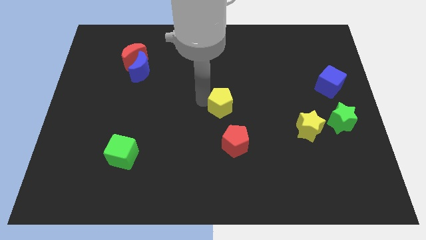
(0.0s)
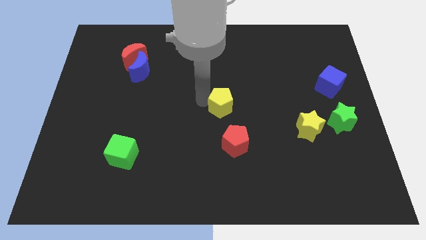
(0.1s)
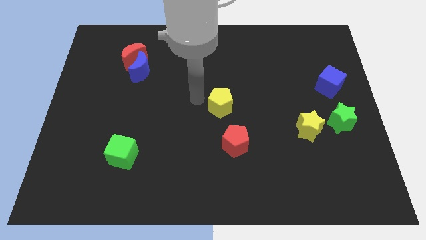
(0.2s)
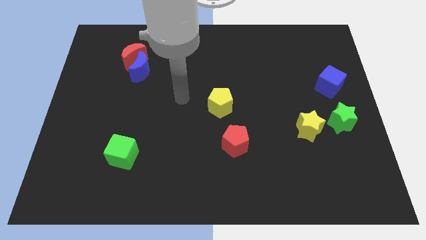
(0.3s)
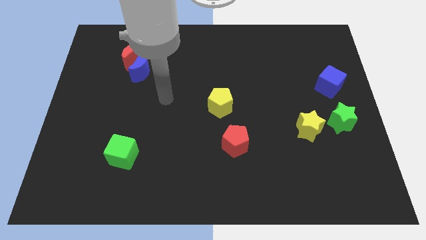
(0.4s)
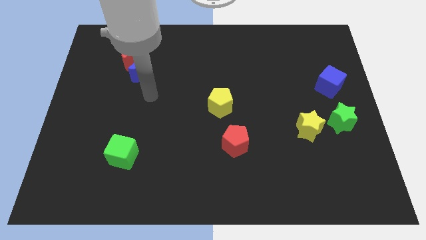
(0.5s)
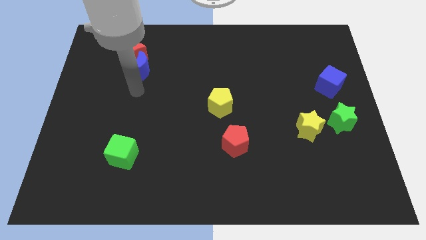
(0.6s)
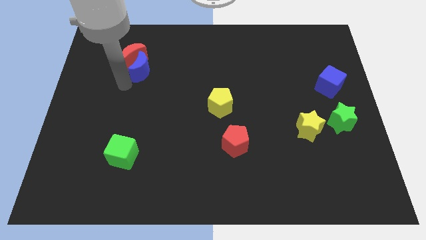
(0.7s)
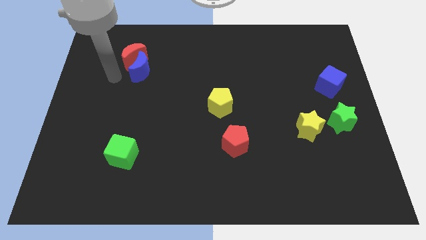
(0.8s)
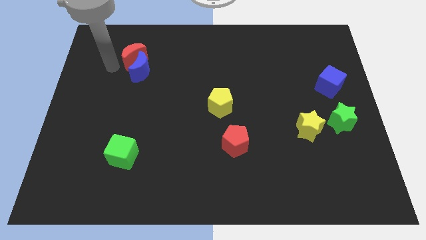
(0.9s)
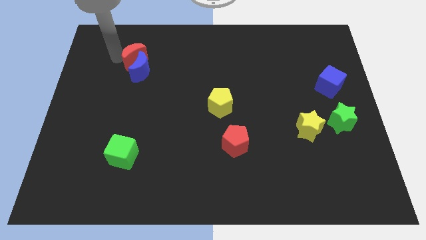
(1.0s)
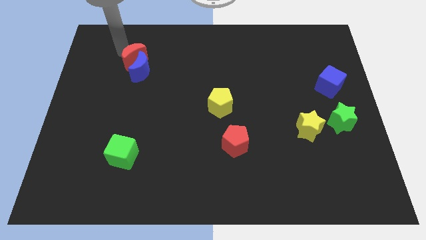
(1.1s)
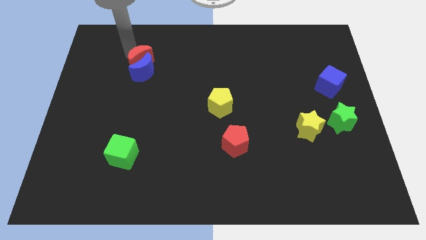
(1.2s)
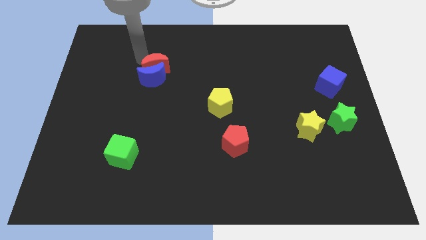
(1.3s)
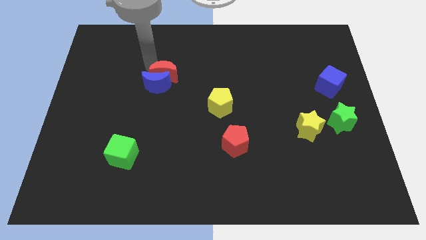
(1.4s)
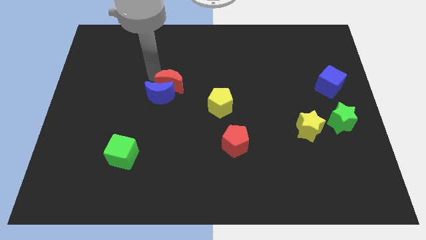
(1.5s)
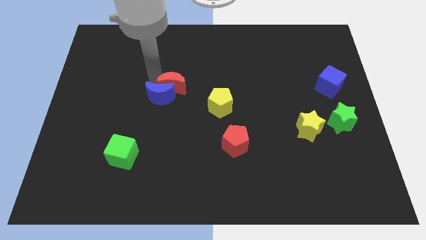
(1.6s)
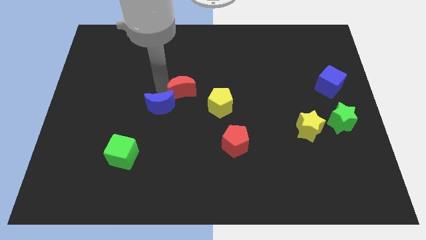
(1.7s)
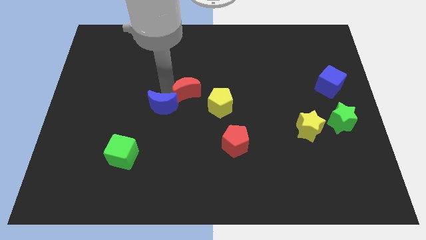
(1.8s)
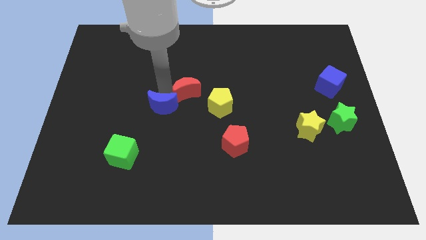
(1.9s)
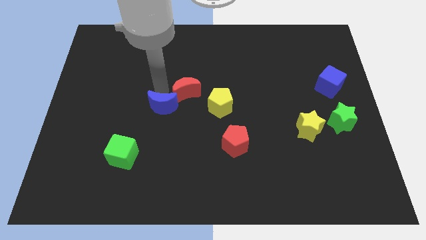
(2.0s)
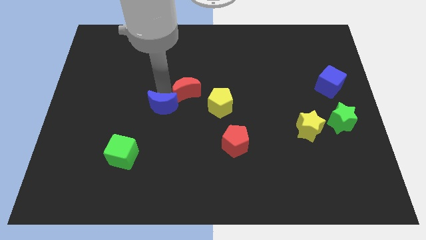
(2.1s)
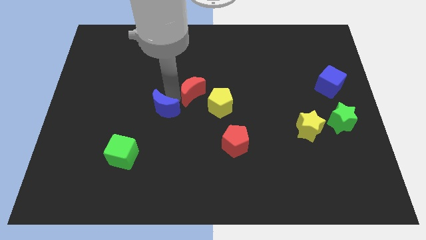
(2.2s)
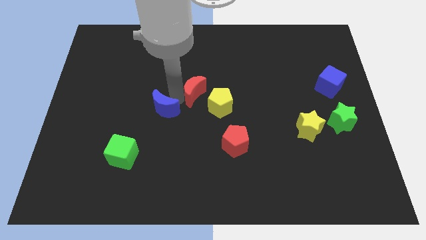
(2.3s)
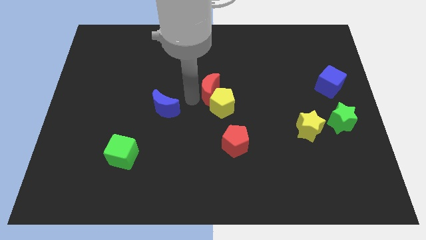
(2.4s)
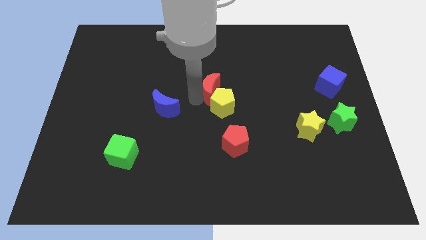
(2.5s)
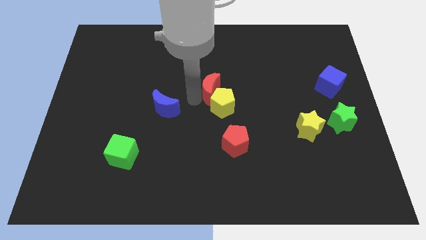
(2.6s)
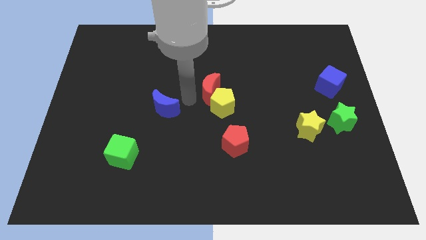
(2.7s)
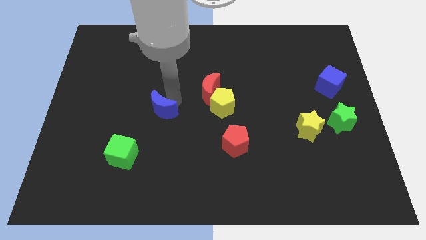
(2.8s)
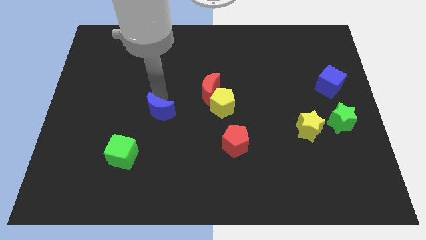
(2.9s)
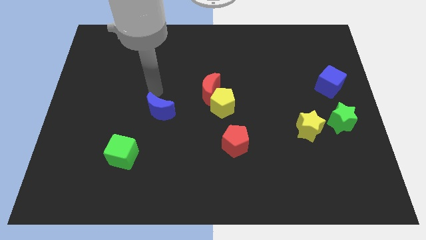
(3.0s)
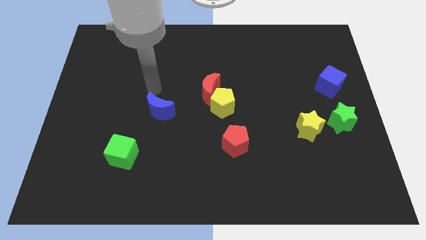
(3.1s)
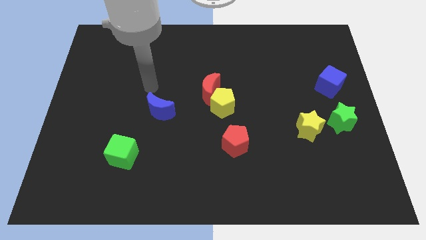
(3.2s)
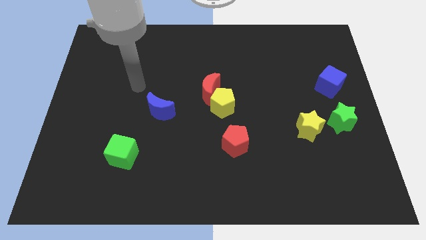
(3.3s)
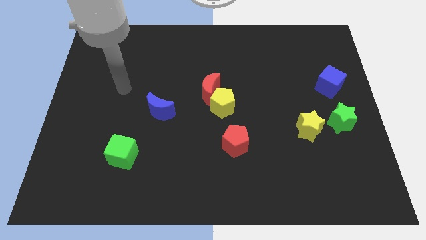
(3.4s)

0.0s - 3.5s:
push red moon into the yellow pentagon

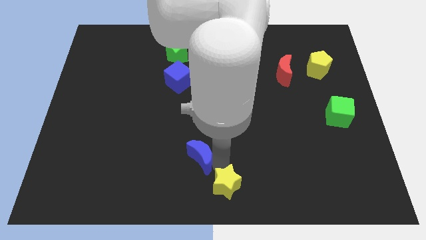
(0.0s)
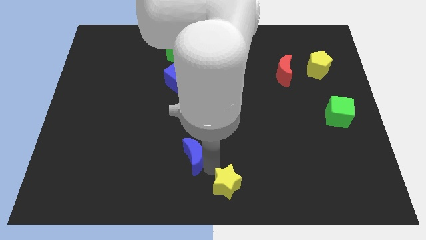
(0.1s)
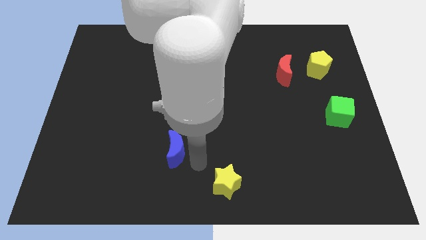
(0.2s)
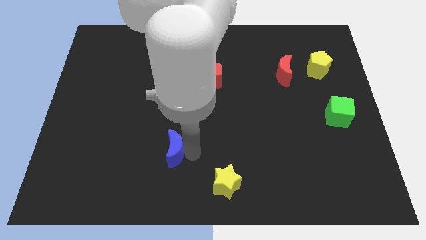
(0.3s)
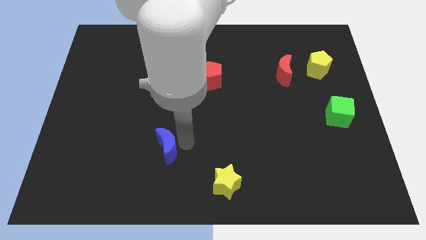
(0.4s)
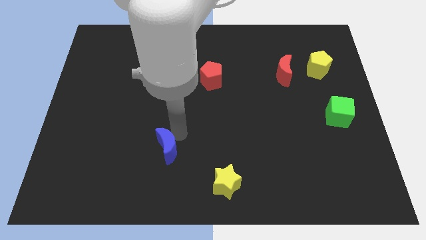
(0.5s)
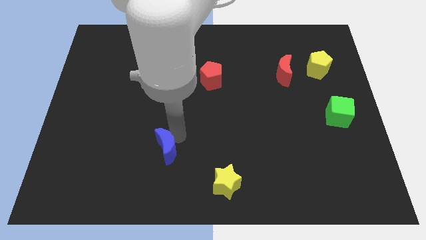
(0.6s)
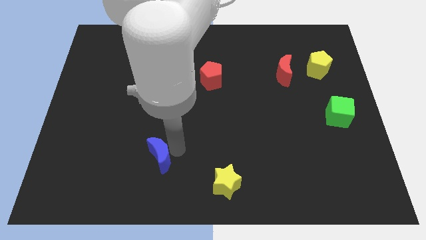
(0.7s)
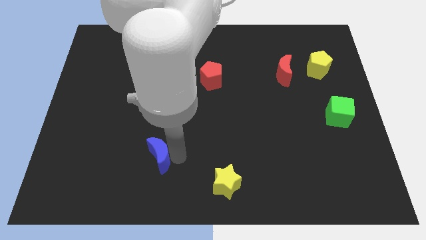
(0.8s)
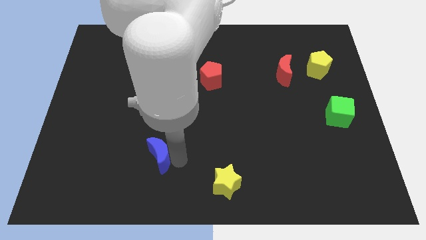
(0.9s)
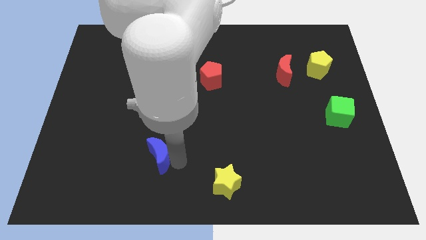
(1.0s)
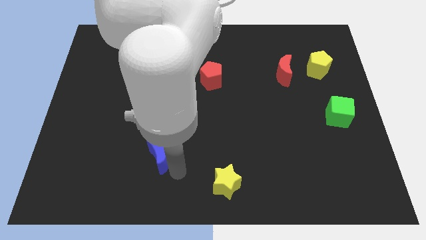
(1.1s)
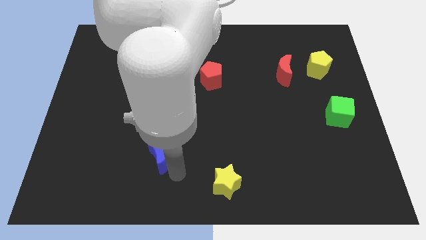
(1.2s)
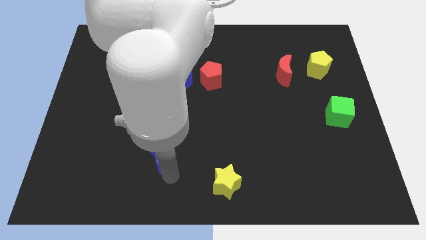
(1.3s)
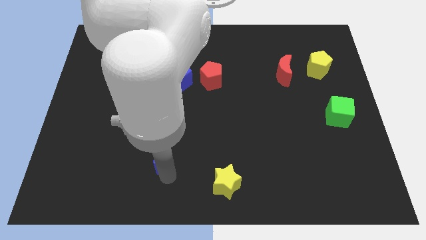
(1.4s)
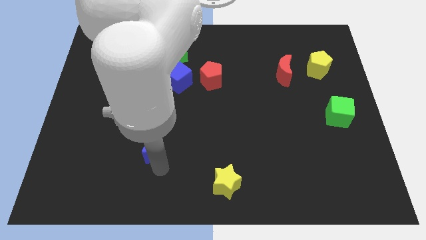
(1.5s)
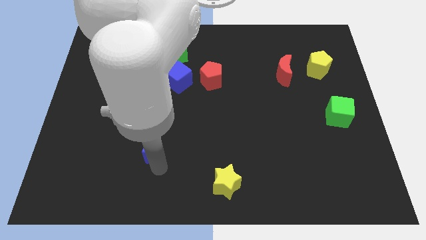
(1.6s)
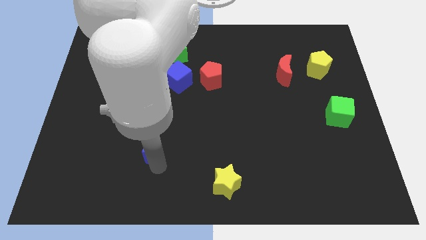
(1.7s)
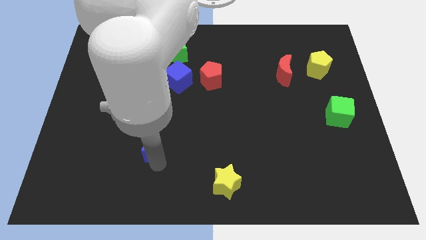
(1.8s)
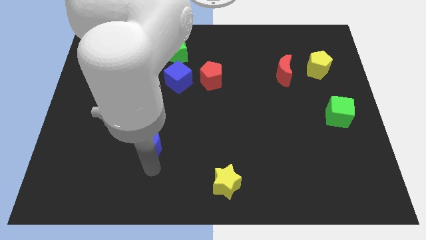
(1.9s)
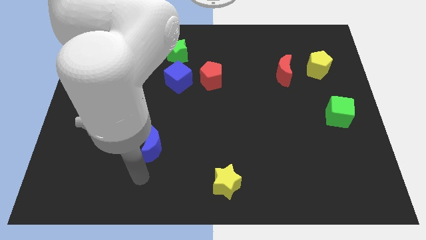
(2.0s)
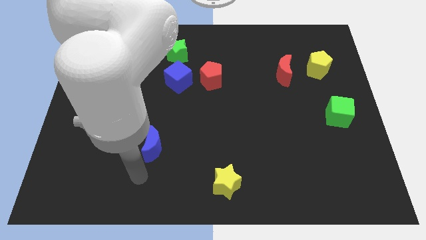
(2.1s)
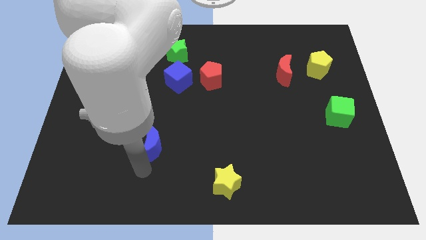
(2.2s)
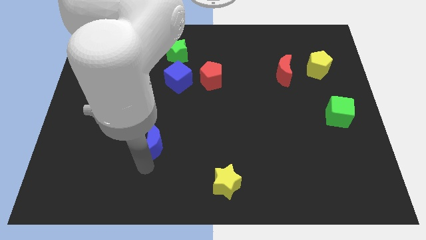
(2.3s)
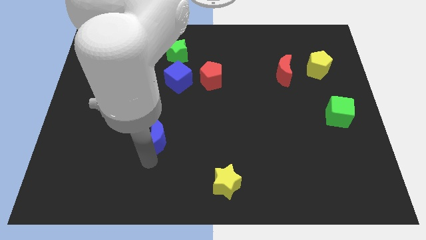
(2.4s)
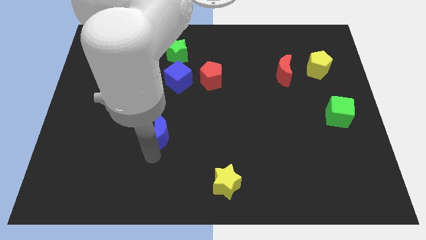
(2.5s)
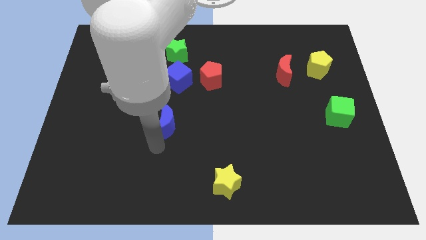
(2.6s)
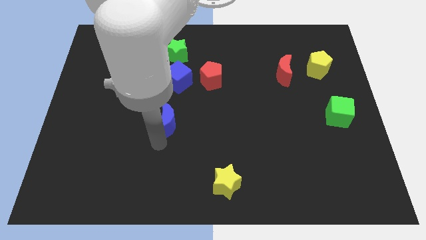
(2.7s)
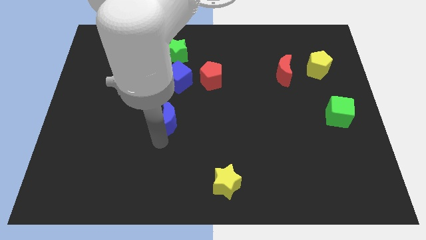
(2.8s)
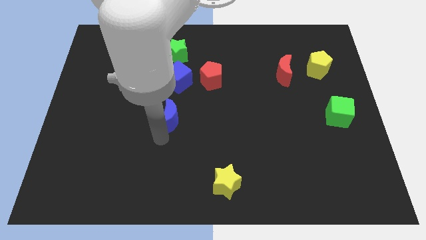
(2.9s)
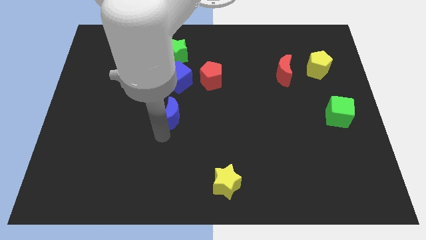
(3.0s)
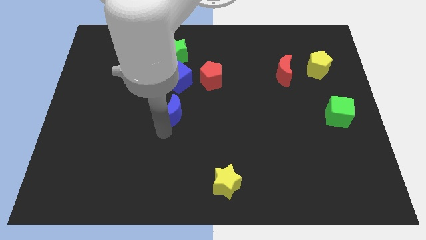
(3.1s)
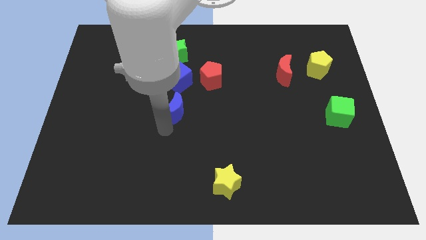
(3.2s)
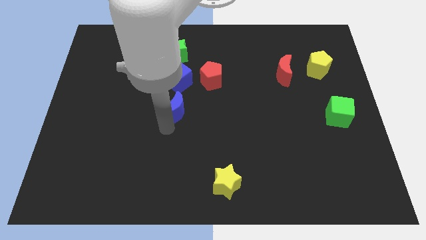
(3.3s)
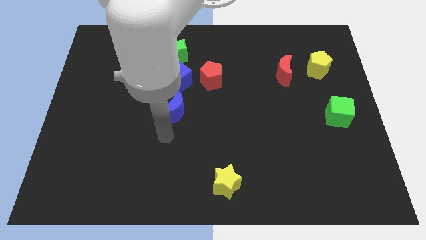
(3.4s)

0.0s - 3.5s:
move the blue crescent to the bottom of the blue cube

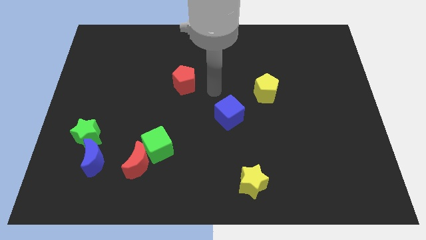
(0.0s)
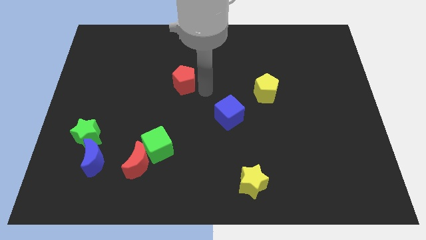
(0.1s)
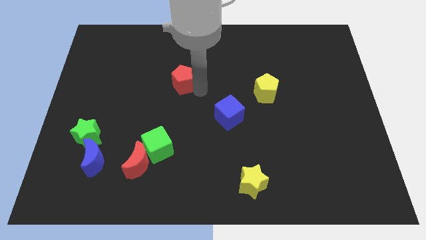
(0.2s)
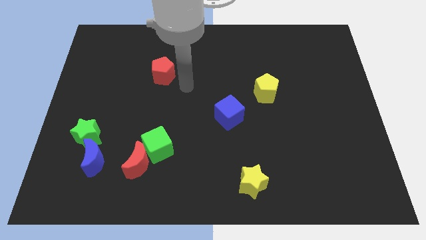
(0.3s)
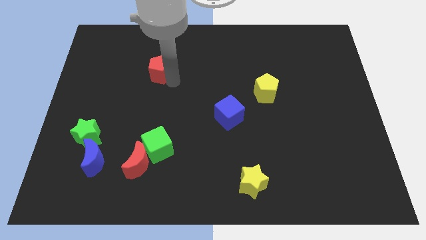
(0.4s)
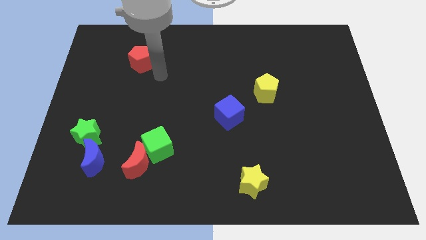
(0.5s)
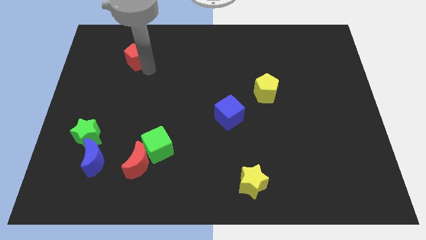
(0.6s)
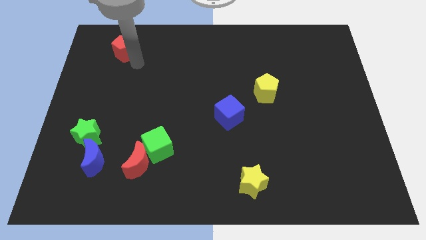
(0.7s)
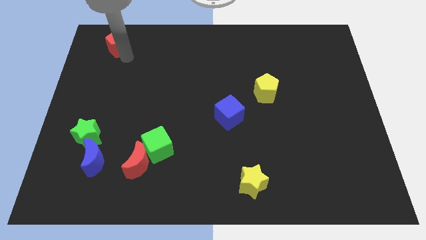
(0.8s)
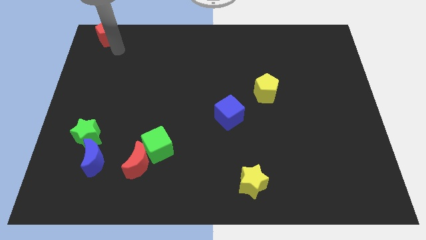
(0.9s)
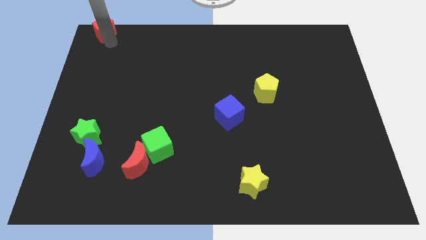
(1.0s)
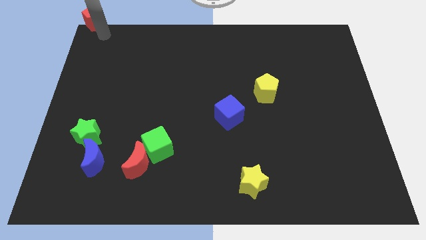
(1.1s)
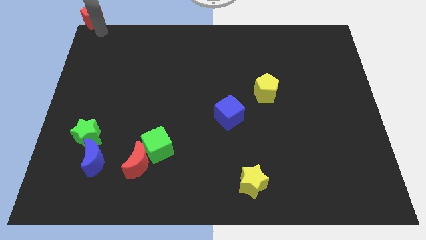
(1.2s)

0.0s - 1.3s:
push red pentagon towards the top left

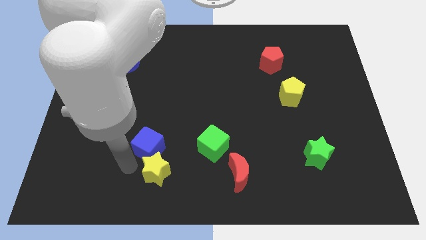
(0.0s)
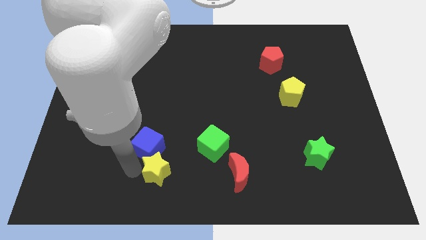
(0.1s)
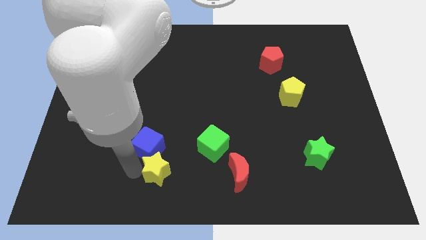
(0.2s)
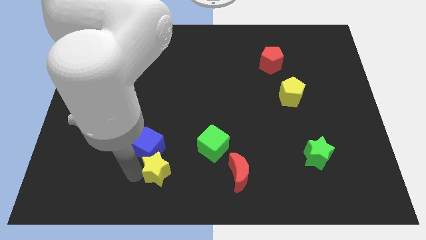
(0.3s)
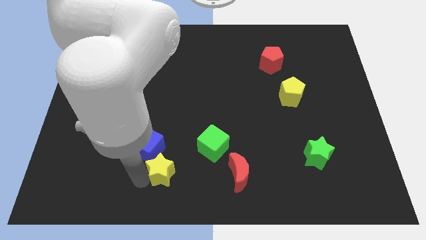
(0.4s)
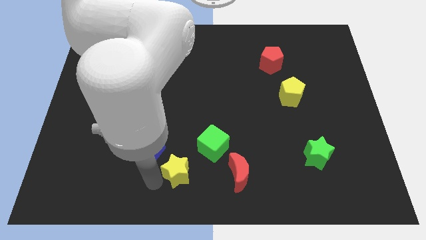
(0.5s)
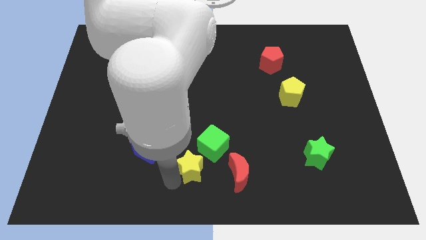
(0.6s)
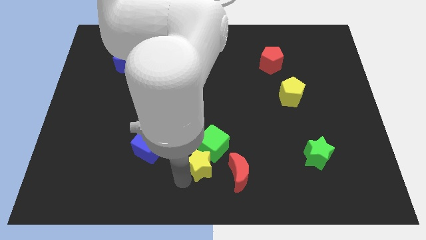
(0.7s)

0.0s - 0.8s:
separate yellow star from blue cube

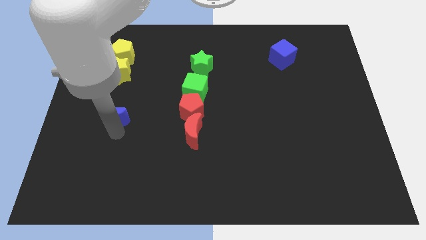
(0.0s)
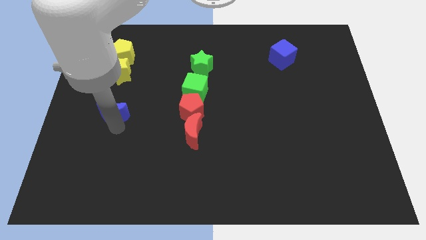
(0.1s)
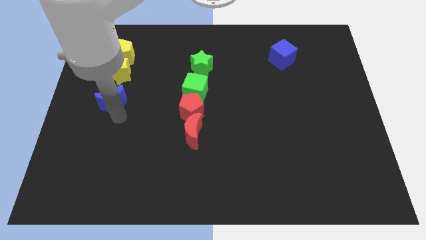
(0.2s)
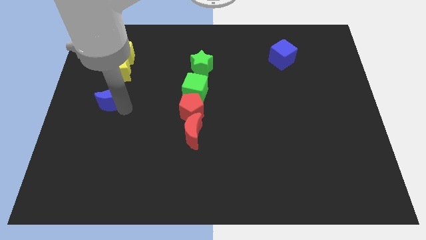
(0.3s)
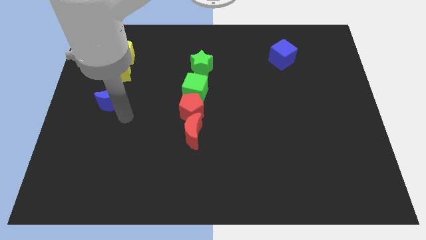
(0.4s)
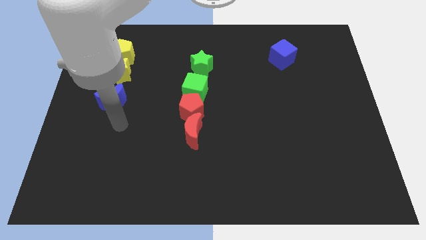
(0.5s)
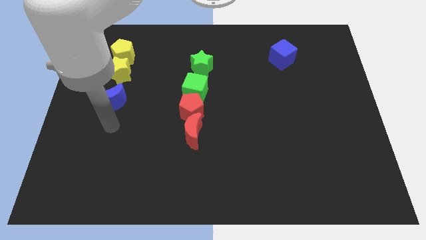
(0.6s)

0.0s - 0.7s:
place blue crescent below the yellow star
